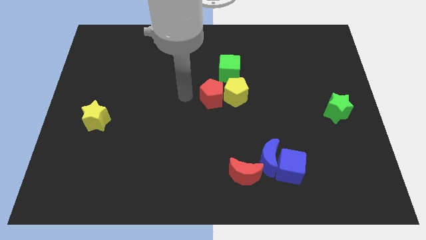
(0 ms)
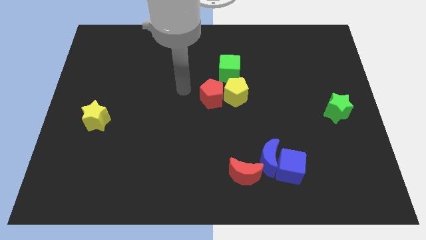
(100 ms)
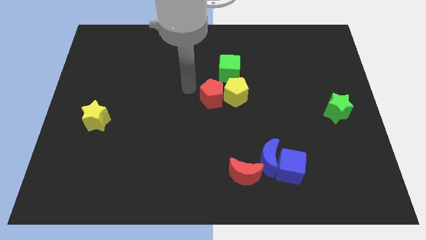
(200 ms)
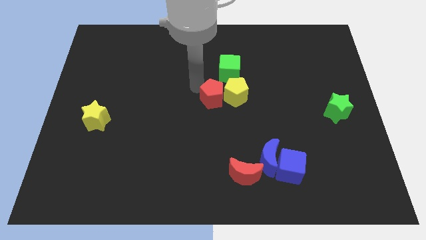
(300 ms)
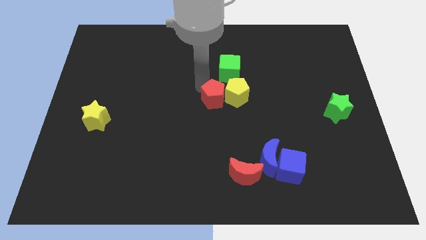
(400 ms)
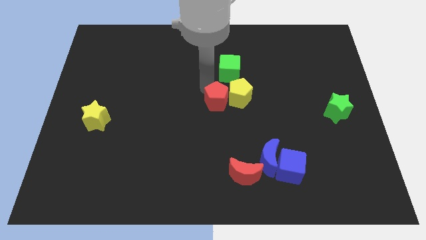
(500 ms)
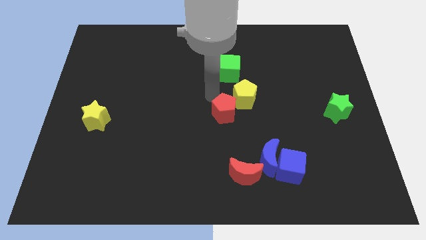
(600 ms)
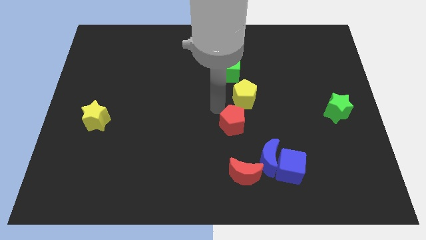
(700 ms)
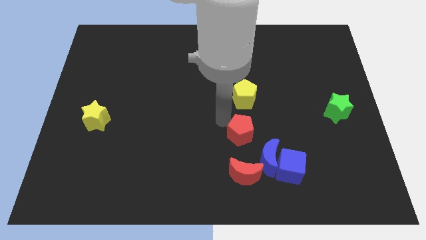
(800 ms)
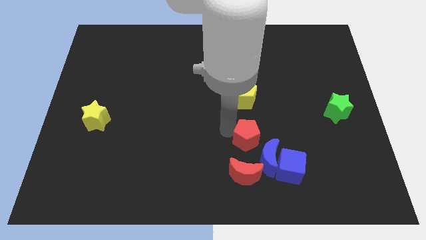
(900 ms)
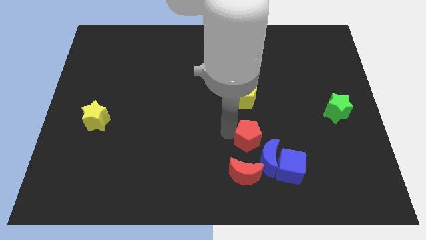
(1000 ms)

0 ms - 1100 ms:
move the red pentagon to the bottom of the yellow pentagon

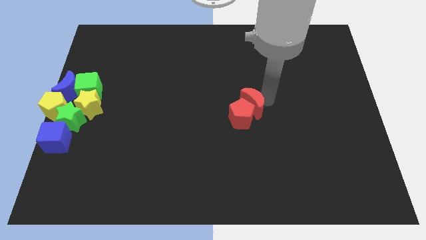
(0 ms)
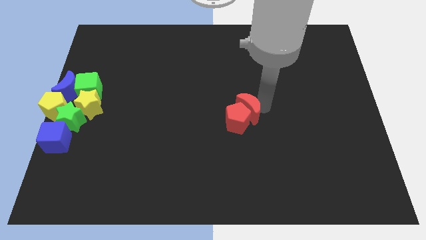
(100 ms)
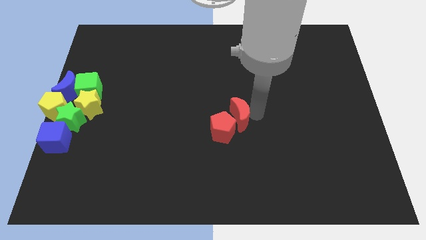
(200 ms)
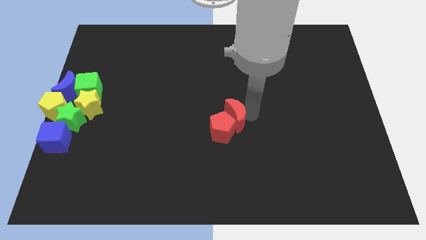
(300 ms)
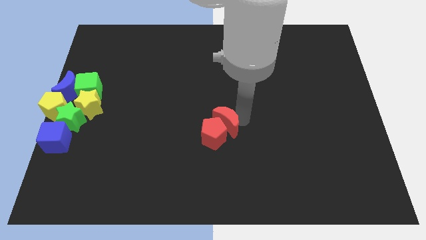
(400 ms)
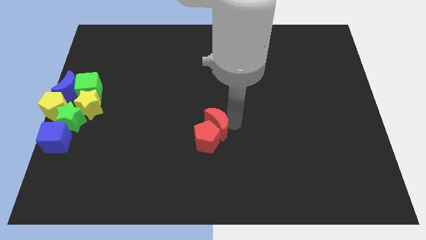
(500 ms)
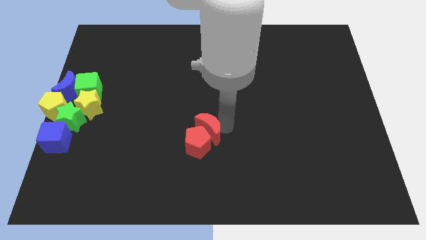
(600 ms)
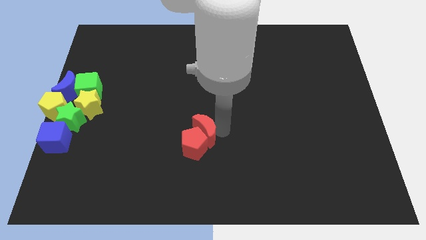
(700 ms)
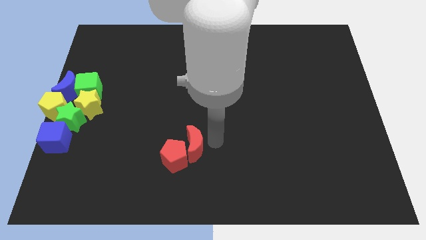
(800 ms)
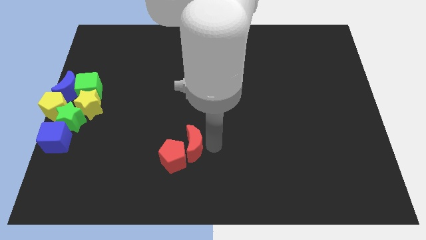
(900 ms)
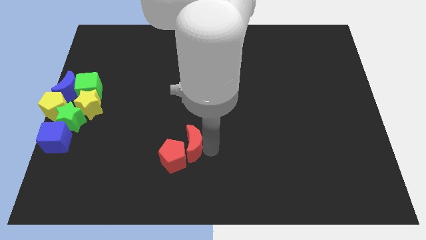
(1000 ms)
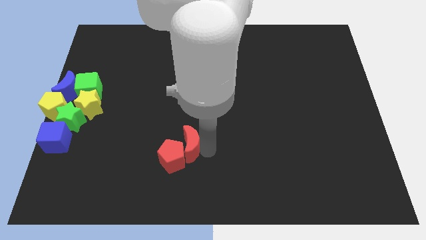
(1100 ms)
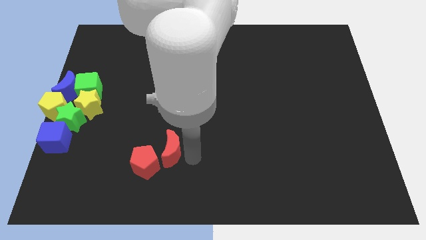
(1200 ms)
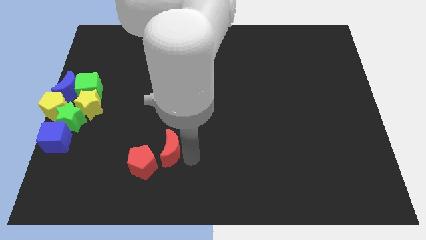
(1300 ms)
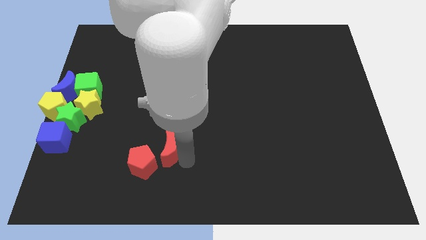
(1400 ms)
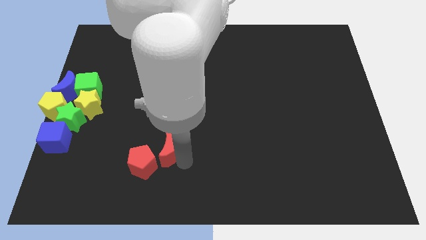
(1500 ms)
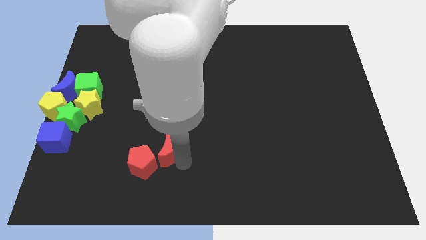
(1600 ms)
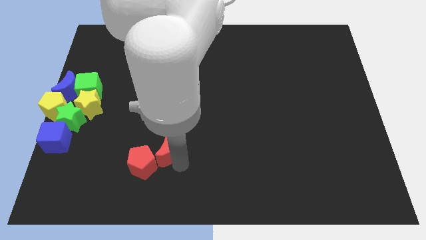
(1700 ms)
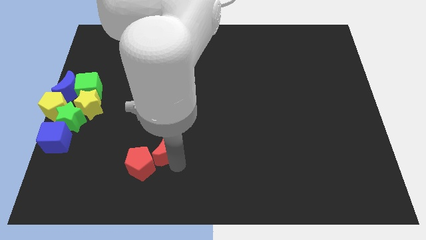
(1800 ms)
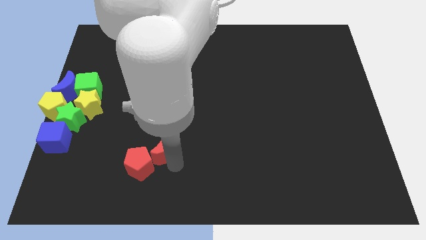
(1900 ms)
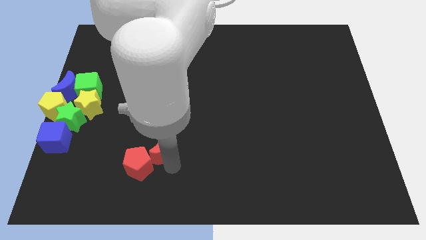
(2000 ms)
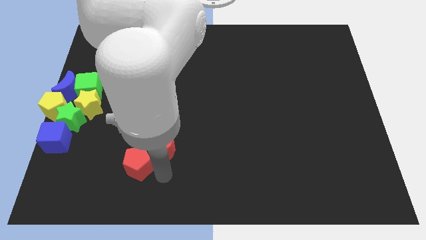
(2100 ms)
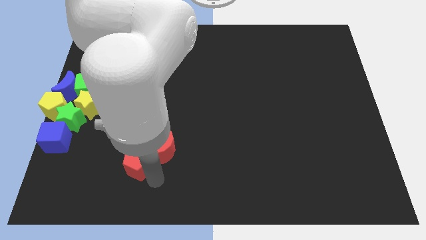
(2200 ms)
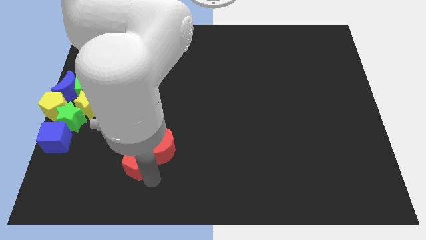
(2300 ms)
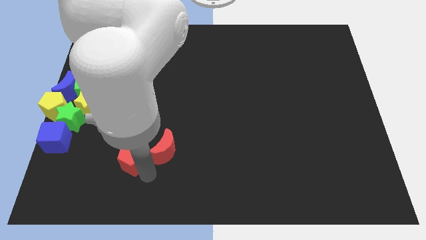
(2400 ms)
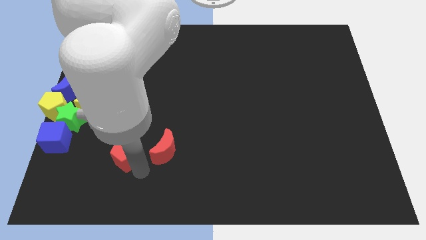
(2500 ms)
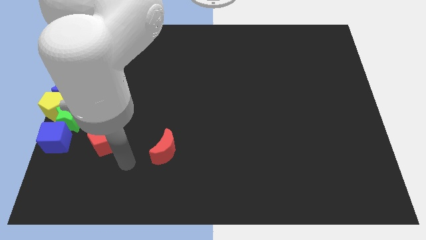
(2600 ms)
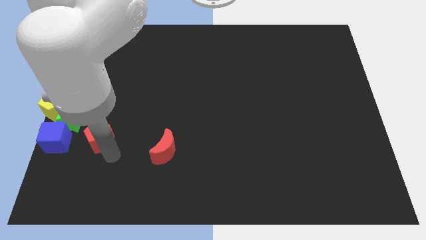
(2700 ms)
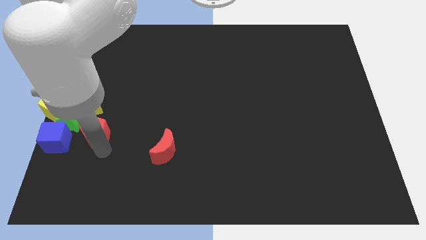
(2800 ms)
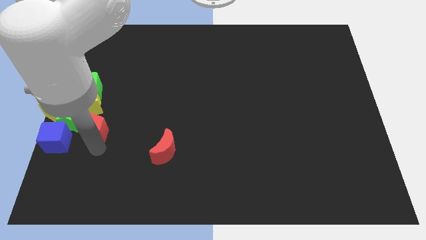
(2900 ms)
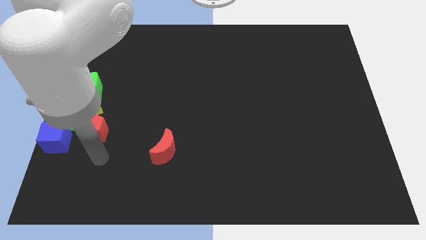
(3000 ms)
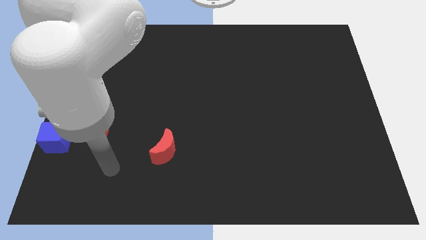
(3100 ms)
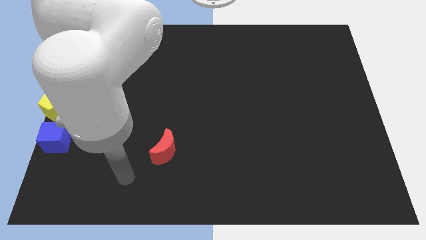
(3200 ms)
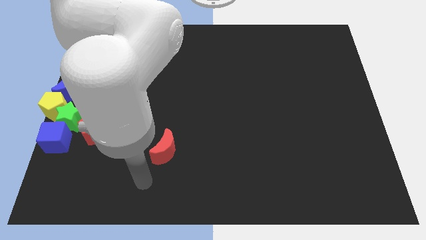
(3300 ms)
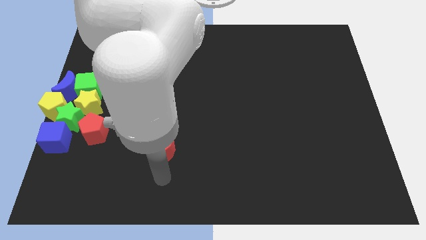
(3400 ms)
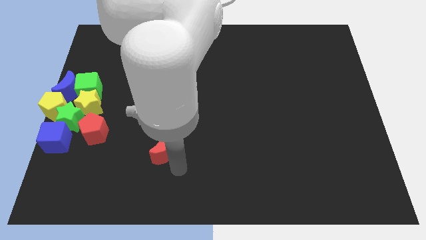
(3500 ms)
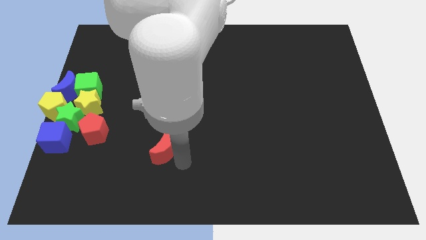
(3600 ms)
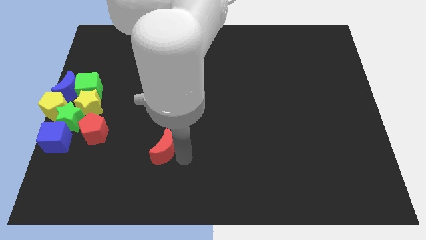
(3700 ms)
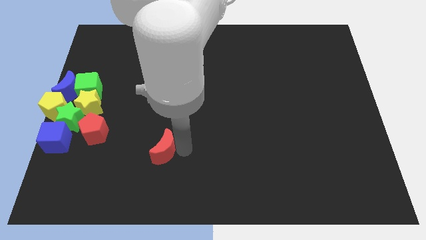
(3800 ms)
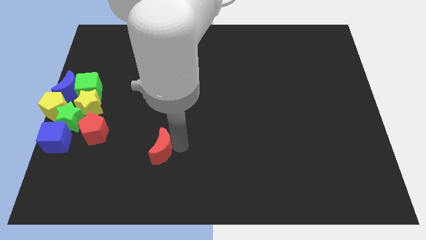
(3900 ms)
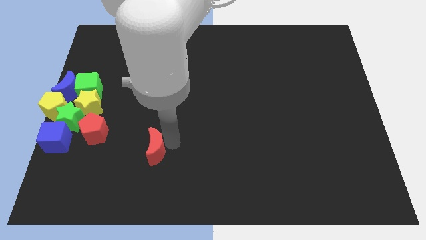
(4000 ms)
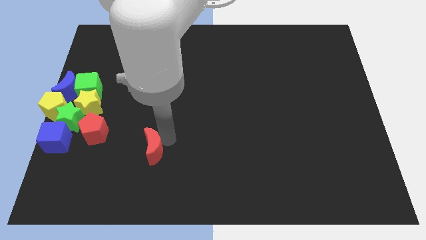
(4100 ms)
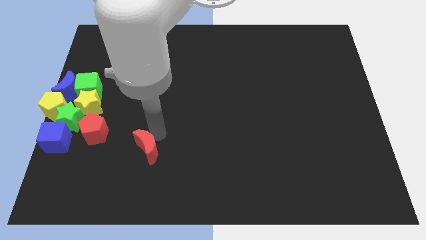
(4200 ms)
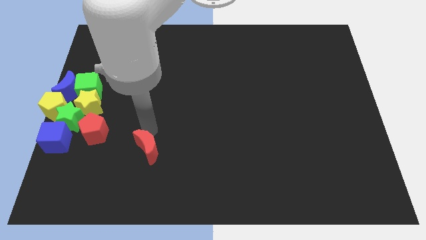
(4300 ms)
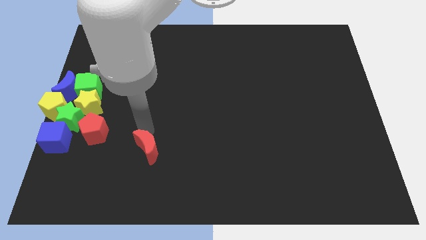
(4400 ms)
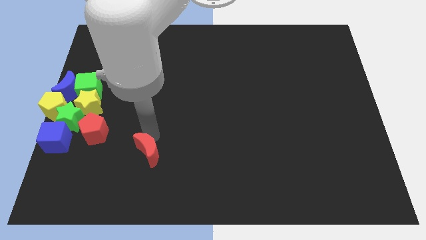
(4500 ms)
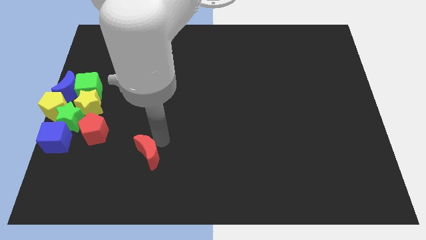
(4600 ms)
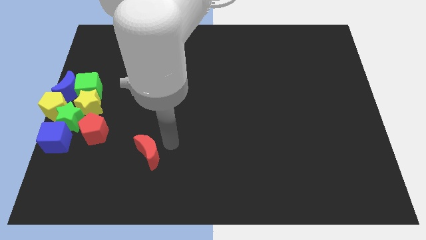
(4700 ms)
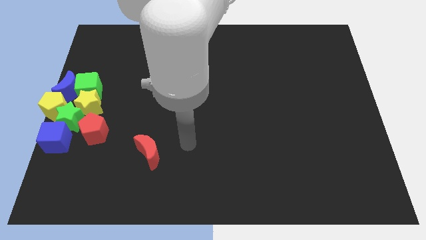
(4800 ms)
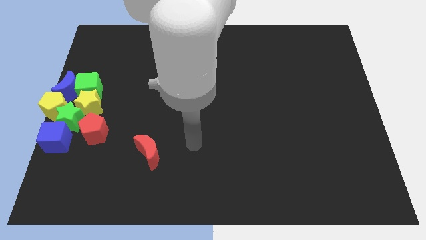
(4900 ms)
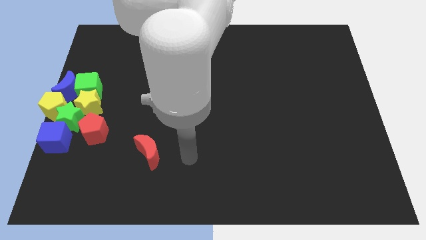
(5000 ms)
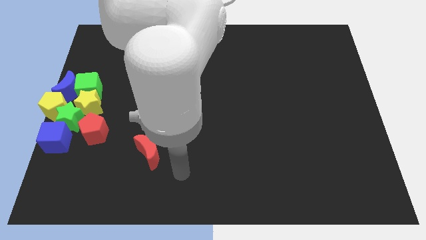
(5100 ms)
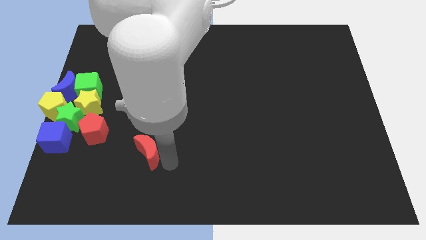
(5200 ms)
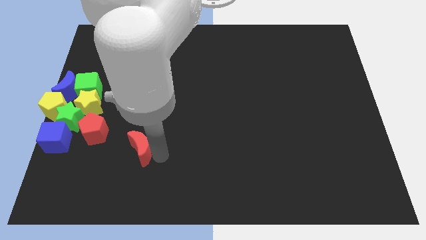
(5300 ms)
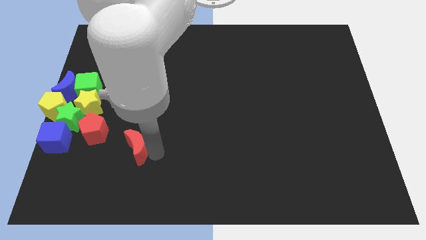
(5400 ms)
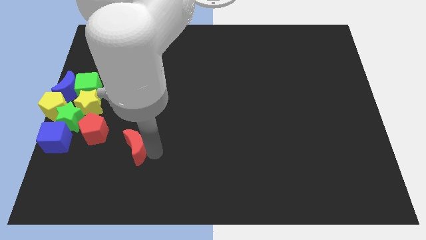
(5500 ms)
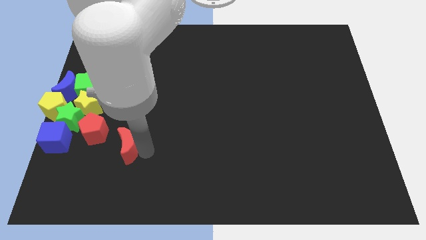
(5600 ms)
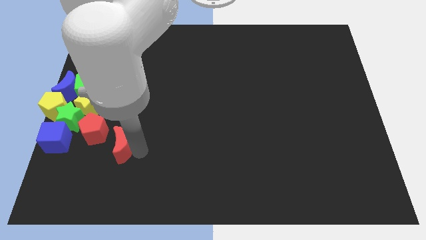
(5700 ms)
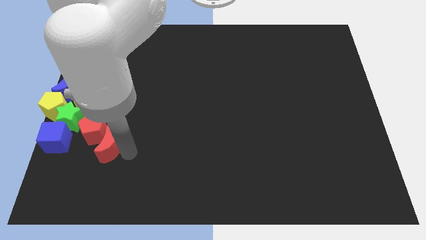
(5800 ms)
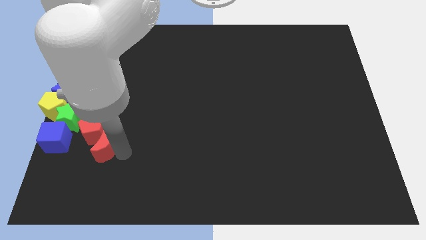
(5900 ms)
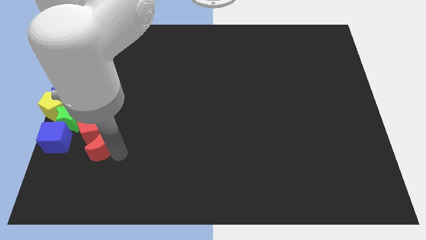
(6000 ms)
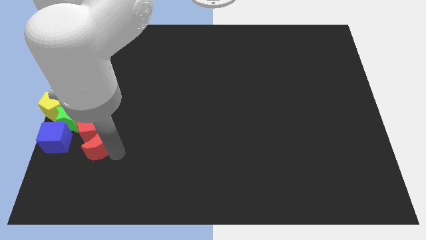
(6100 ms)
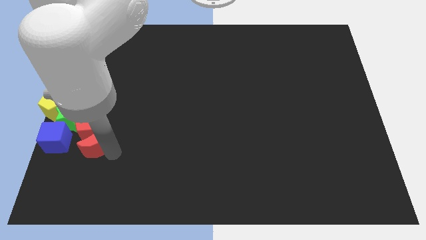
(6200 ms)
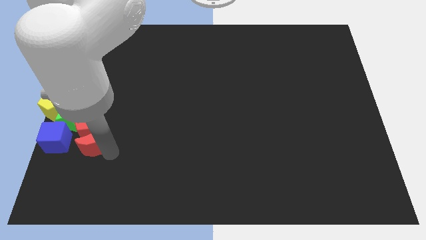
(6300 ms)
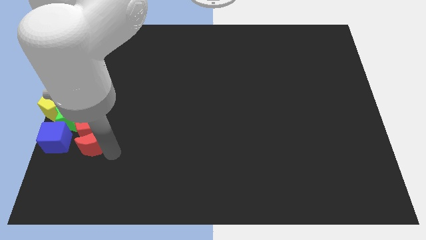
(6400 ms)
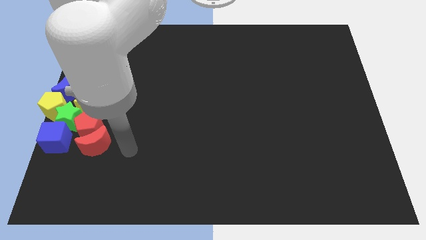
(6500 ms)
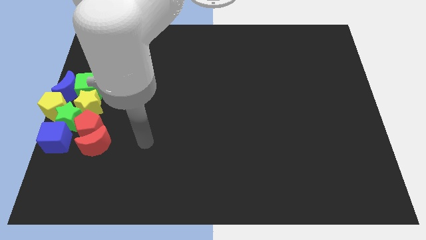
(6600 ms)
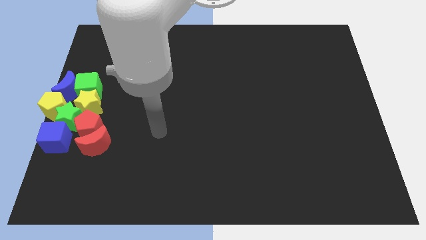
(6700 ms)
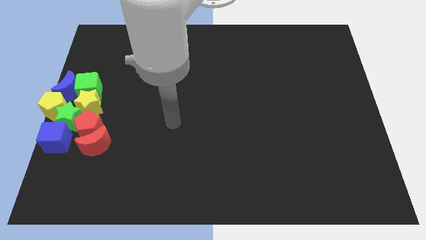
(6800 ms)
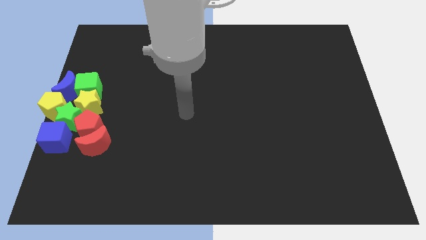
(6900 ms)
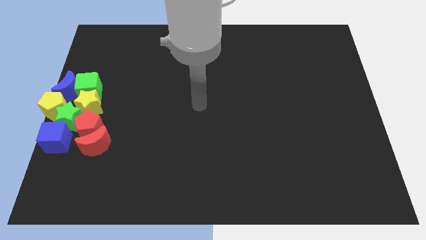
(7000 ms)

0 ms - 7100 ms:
push the red blocks towards the group of blocks

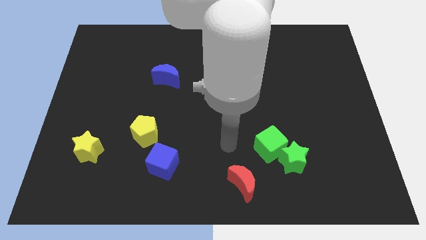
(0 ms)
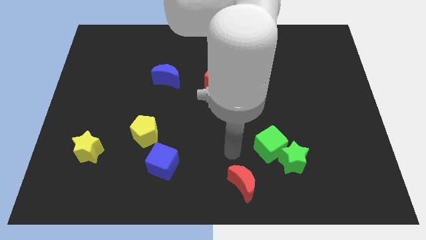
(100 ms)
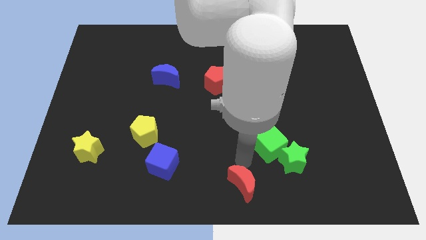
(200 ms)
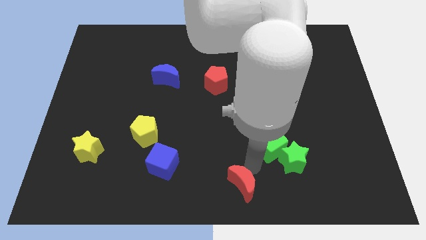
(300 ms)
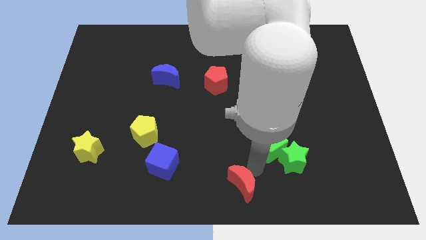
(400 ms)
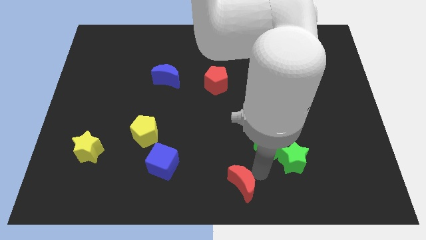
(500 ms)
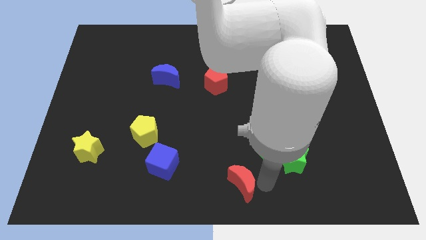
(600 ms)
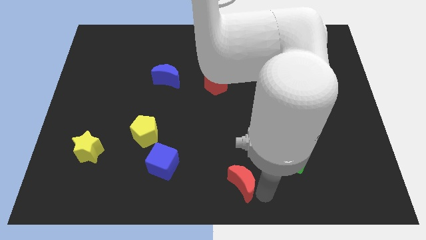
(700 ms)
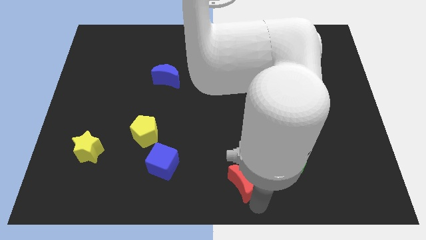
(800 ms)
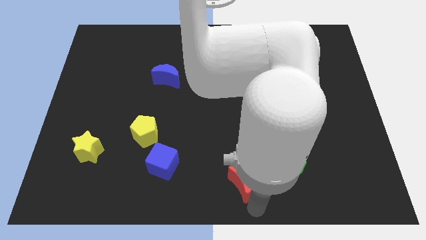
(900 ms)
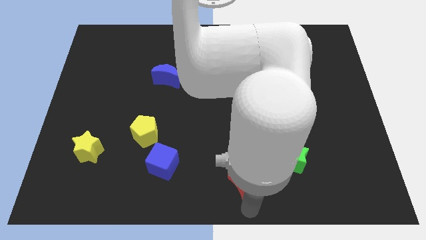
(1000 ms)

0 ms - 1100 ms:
move the arm to the bottom side of the red crescent
